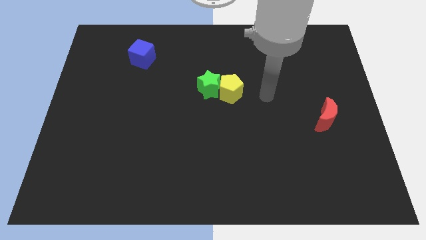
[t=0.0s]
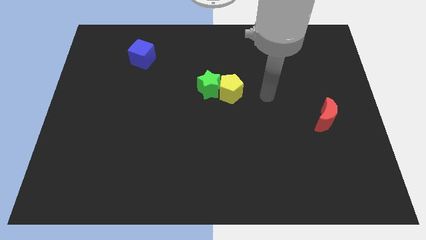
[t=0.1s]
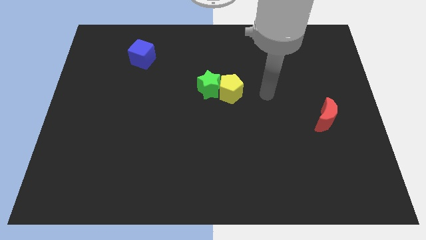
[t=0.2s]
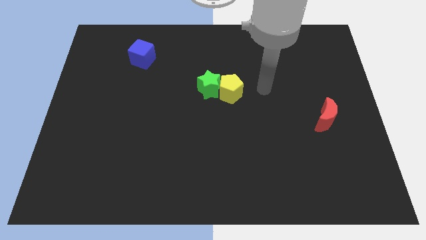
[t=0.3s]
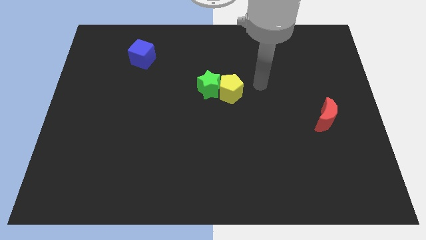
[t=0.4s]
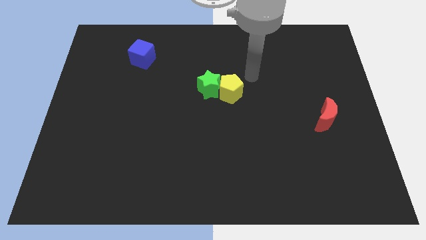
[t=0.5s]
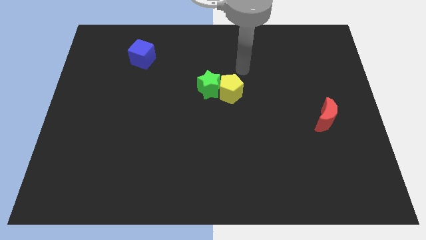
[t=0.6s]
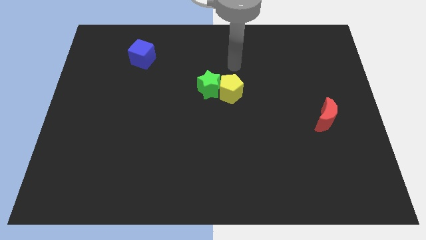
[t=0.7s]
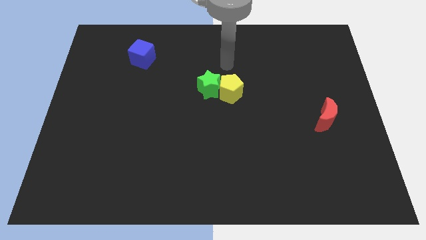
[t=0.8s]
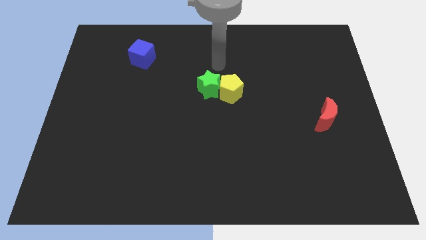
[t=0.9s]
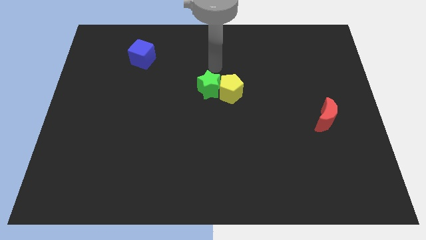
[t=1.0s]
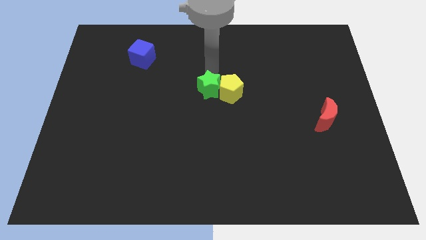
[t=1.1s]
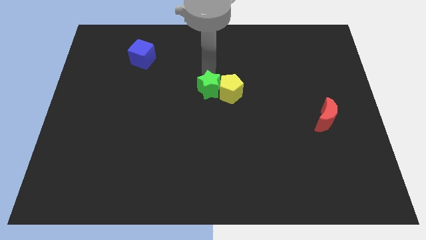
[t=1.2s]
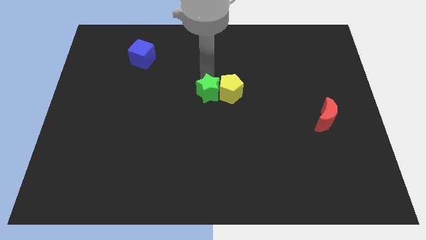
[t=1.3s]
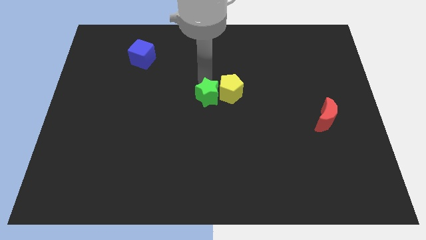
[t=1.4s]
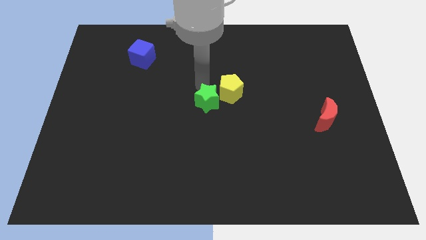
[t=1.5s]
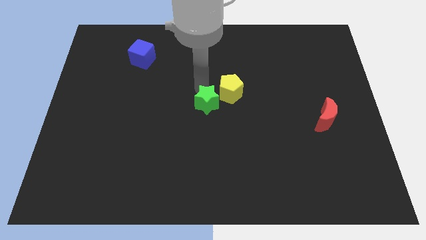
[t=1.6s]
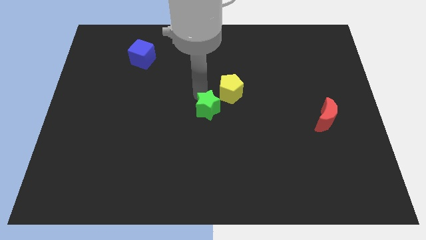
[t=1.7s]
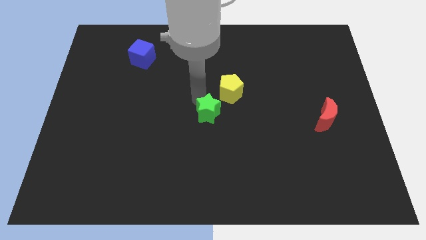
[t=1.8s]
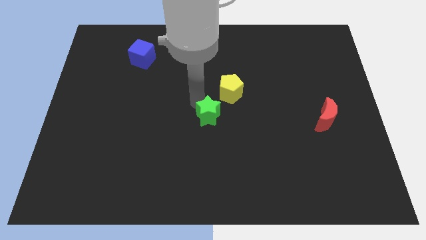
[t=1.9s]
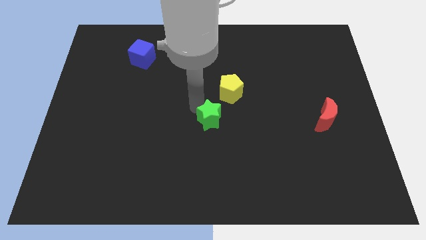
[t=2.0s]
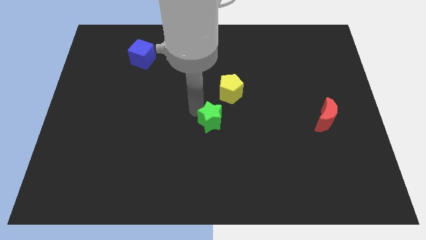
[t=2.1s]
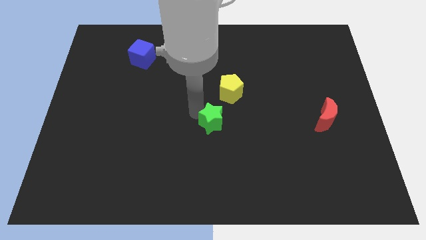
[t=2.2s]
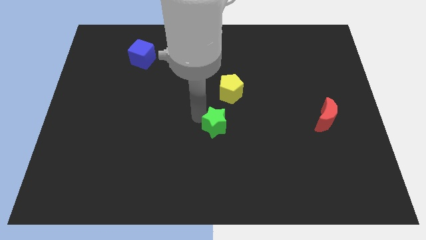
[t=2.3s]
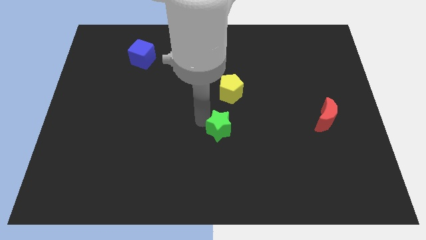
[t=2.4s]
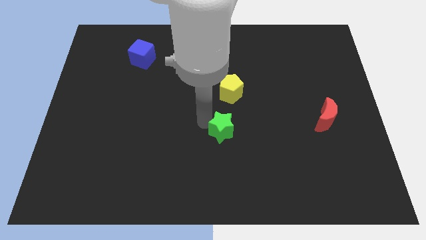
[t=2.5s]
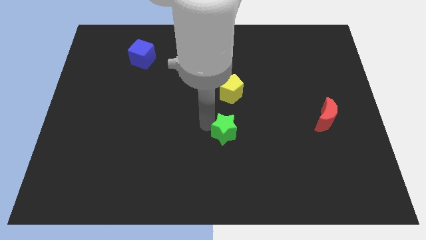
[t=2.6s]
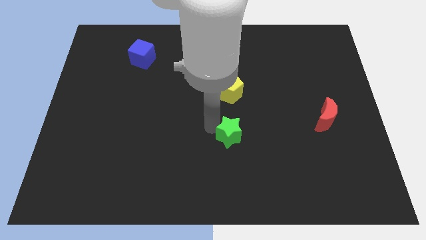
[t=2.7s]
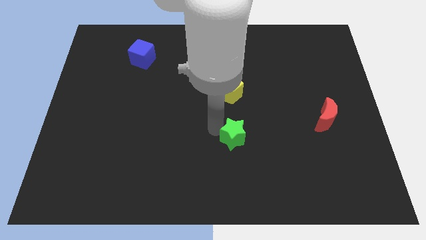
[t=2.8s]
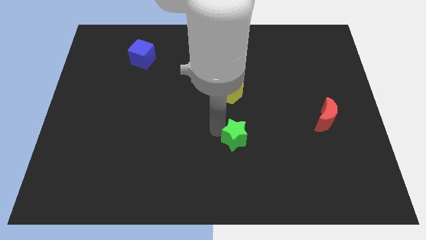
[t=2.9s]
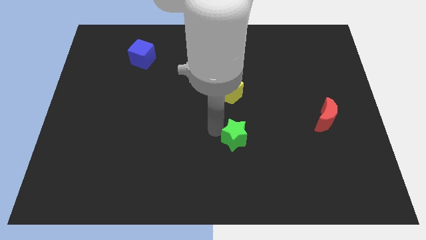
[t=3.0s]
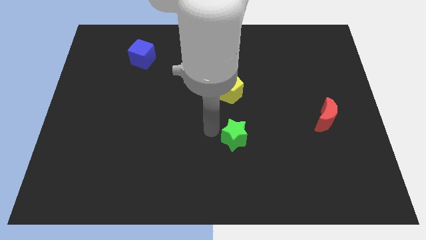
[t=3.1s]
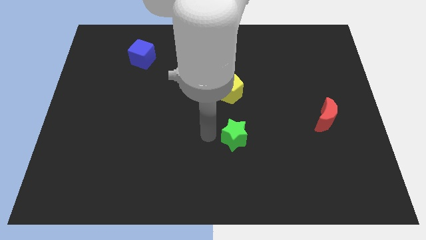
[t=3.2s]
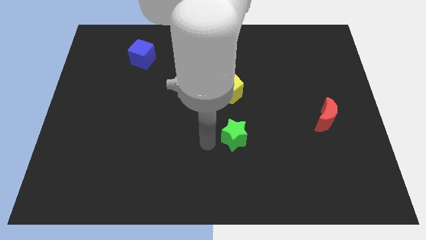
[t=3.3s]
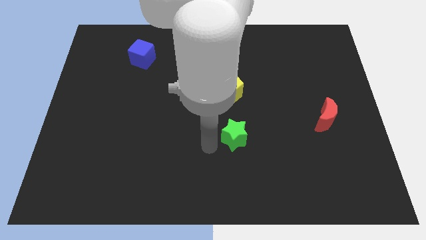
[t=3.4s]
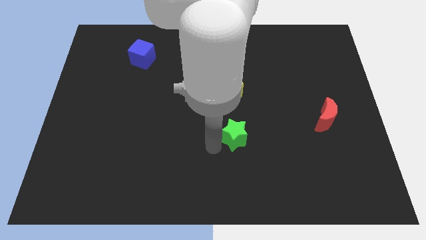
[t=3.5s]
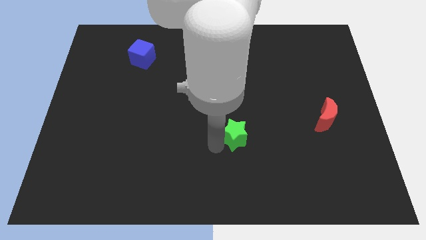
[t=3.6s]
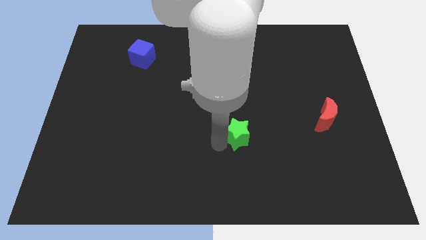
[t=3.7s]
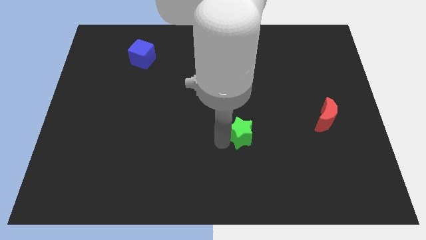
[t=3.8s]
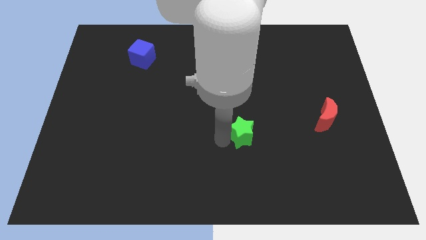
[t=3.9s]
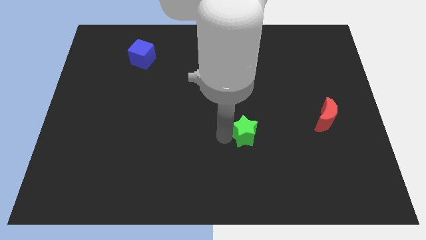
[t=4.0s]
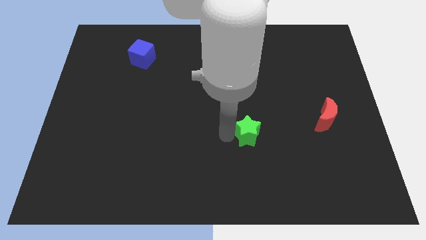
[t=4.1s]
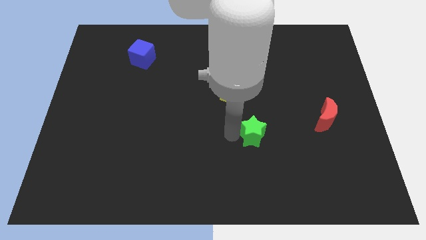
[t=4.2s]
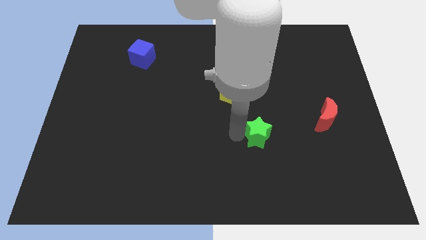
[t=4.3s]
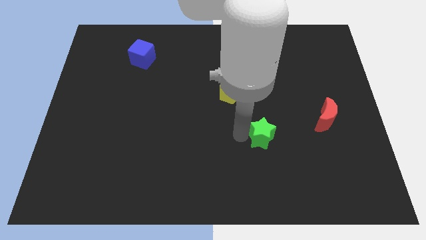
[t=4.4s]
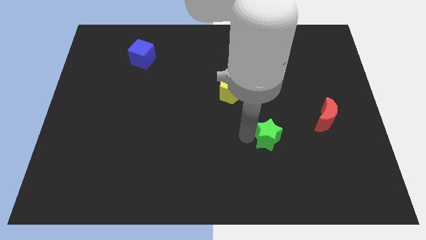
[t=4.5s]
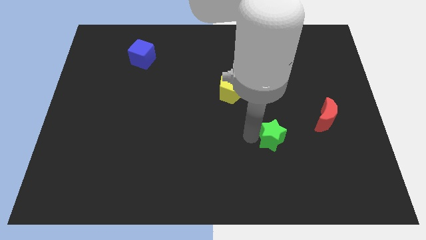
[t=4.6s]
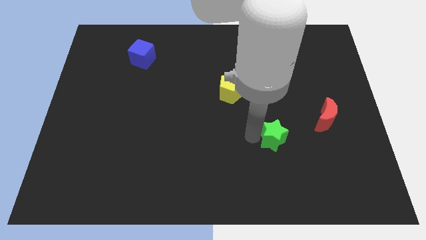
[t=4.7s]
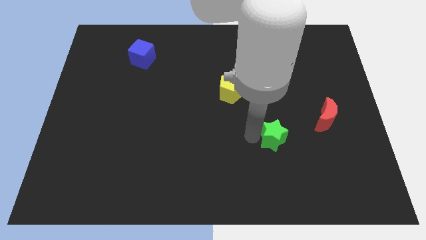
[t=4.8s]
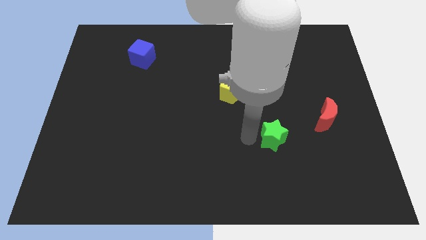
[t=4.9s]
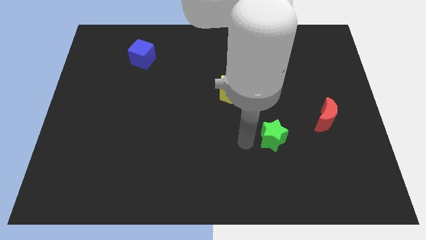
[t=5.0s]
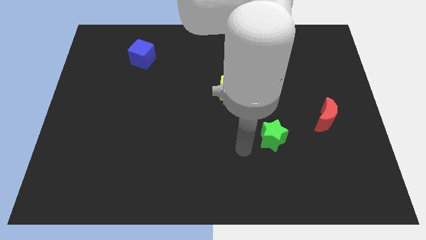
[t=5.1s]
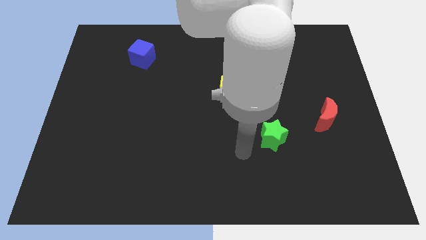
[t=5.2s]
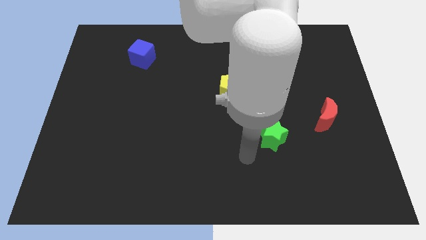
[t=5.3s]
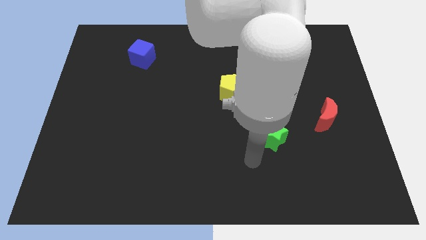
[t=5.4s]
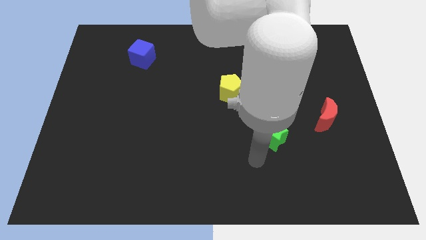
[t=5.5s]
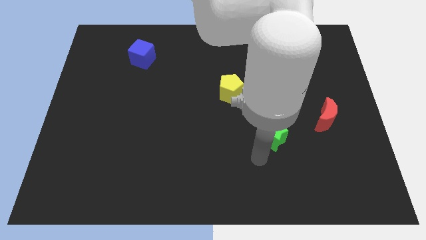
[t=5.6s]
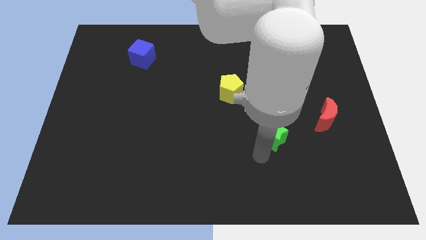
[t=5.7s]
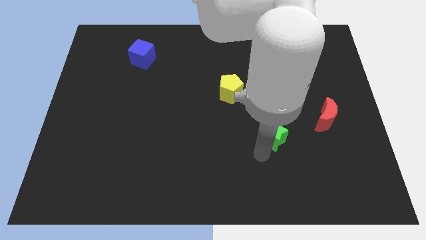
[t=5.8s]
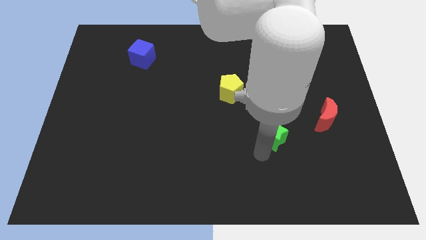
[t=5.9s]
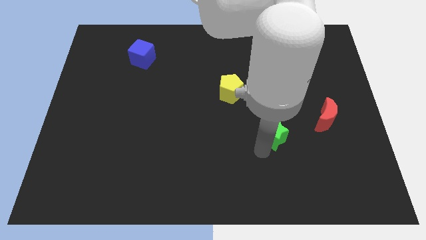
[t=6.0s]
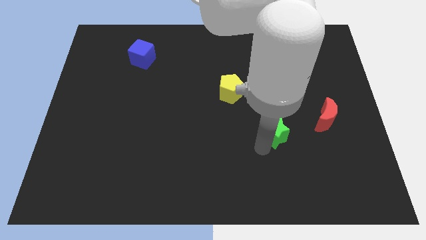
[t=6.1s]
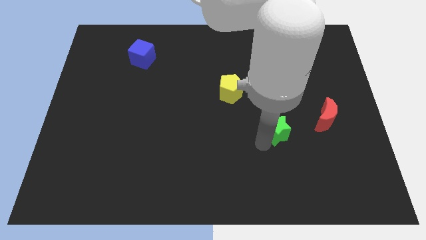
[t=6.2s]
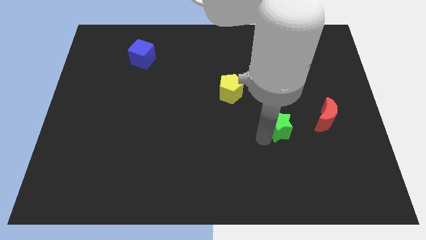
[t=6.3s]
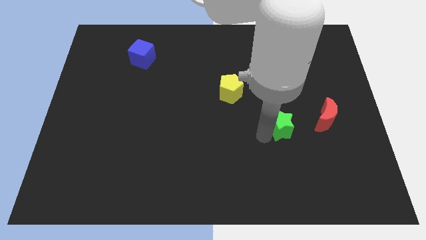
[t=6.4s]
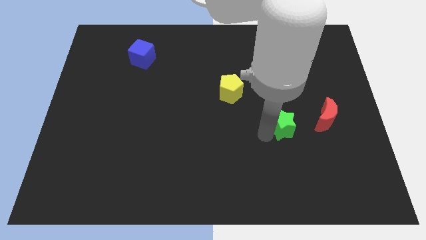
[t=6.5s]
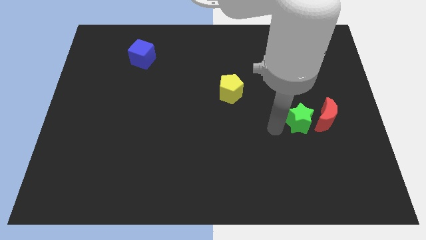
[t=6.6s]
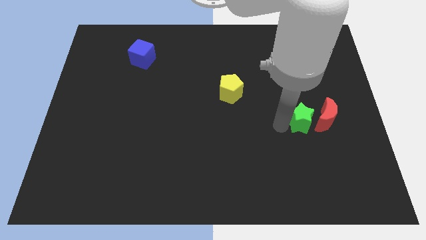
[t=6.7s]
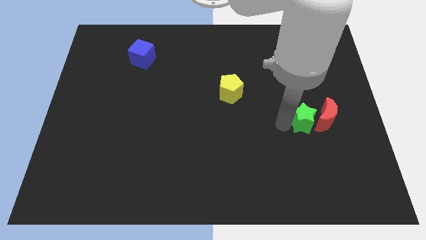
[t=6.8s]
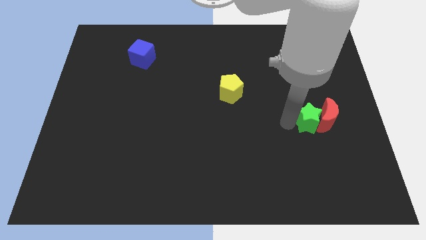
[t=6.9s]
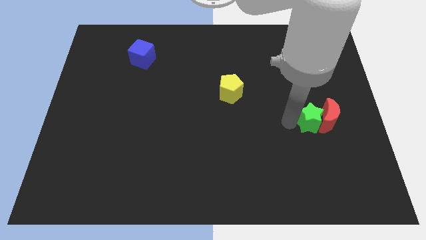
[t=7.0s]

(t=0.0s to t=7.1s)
push the star next to the red block

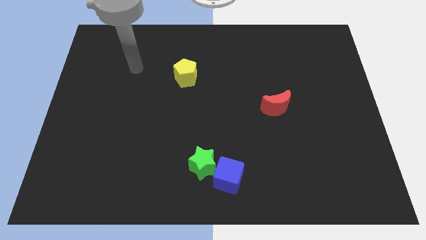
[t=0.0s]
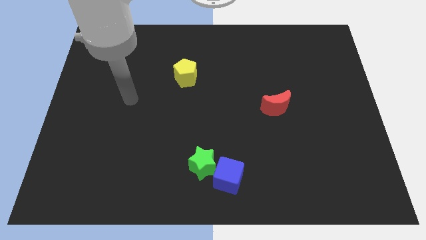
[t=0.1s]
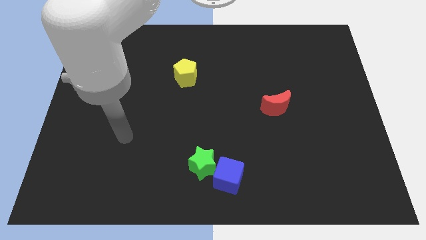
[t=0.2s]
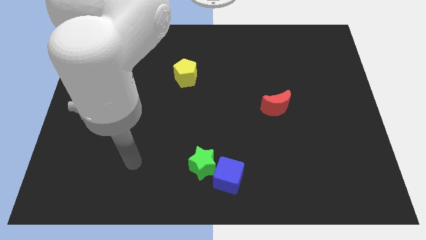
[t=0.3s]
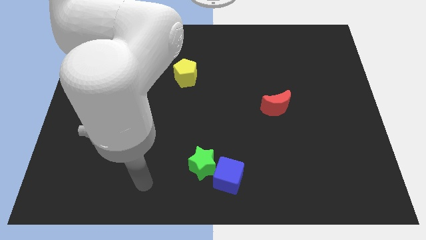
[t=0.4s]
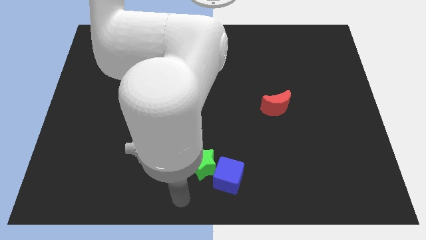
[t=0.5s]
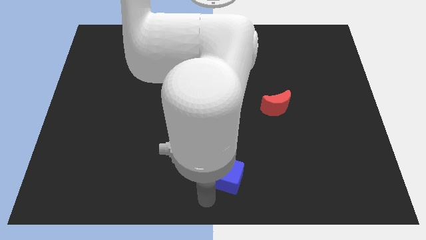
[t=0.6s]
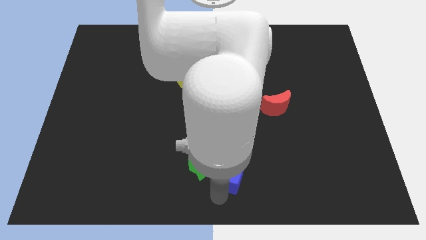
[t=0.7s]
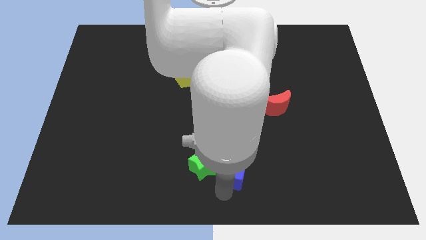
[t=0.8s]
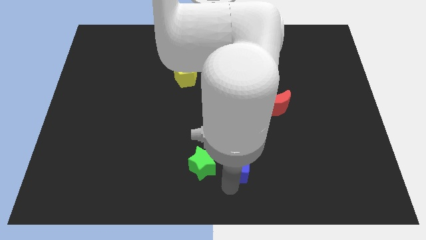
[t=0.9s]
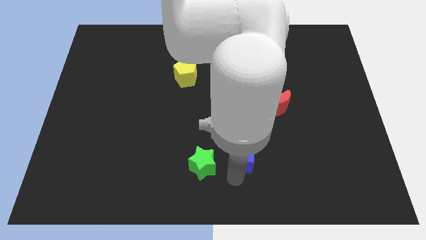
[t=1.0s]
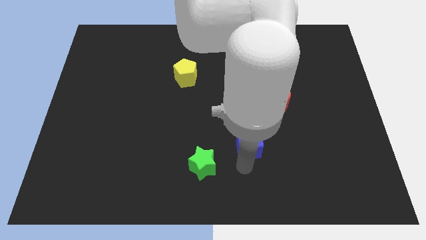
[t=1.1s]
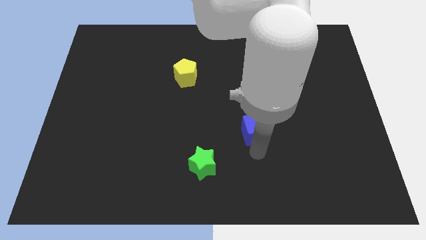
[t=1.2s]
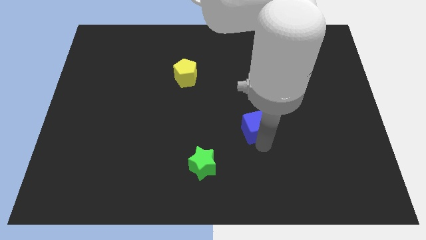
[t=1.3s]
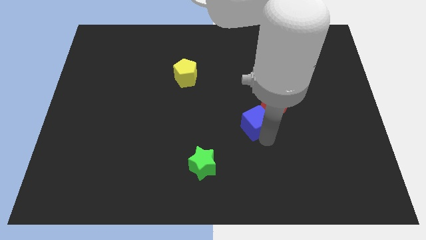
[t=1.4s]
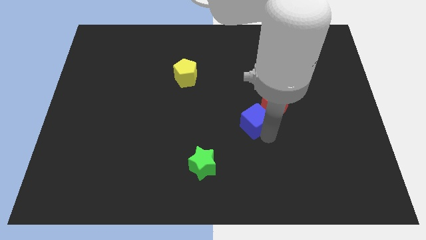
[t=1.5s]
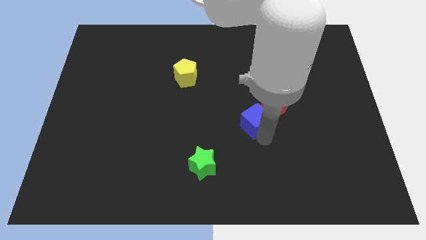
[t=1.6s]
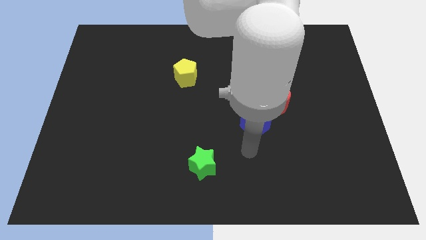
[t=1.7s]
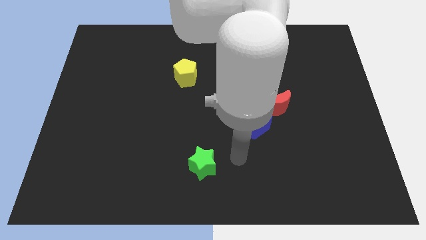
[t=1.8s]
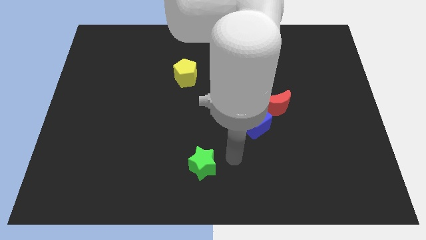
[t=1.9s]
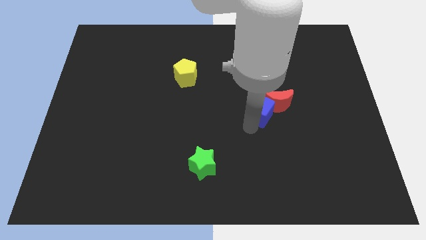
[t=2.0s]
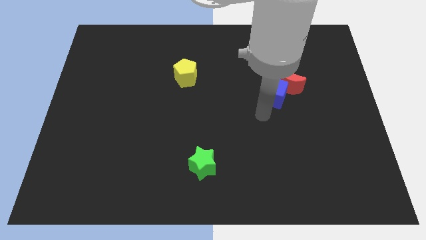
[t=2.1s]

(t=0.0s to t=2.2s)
slide the cube close to the red moon
